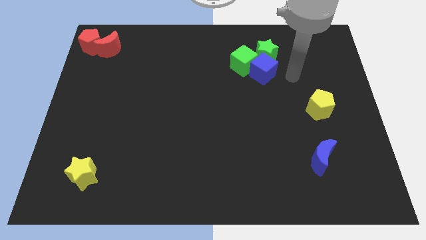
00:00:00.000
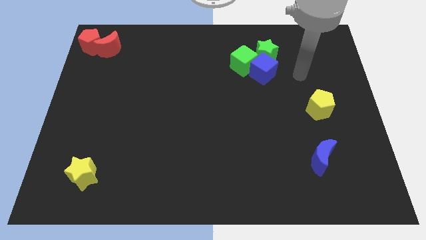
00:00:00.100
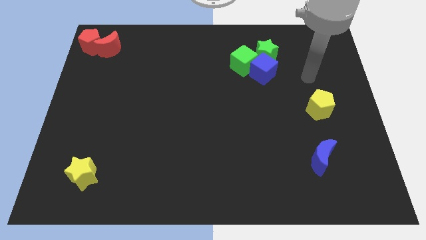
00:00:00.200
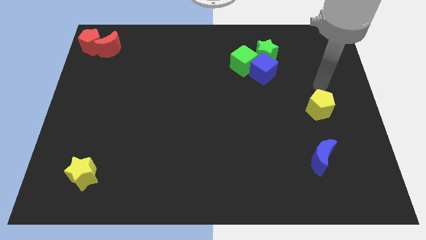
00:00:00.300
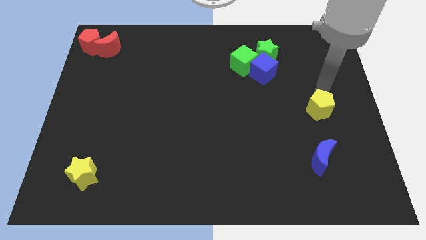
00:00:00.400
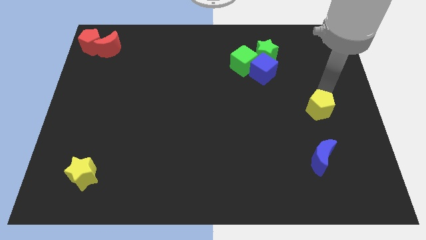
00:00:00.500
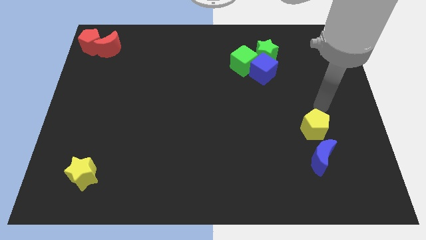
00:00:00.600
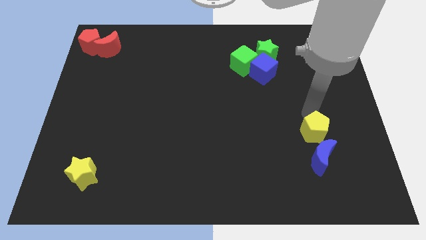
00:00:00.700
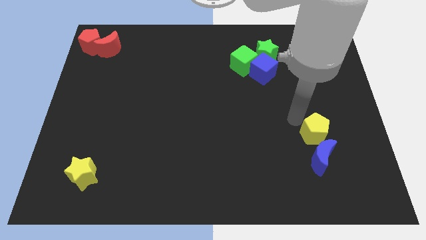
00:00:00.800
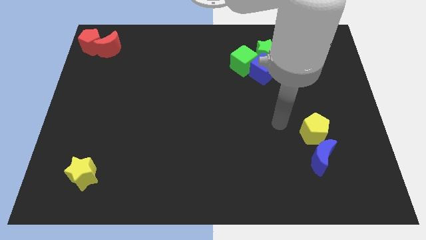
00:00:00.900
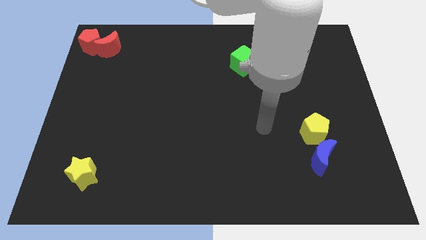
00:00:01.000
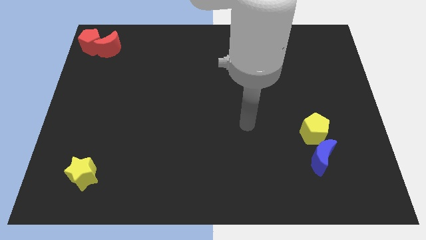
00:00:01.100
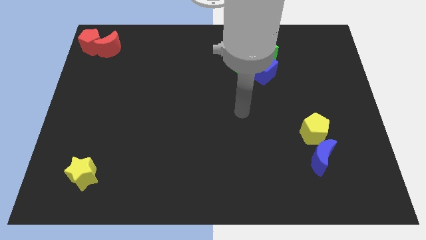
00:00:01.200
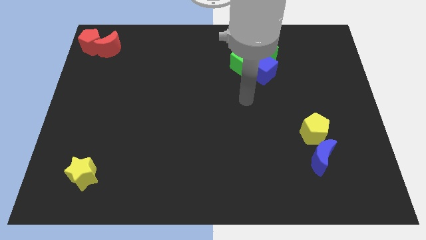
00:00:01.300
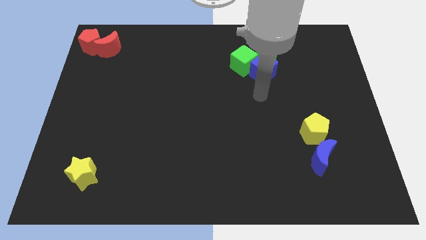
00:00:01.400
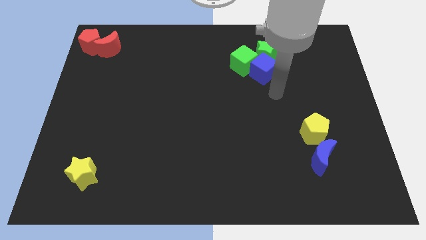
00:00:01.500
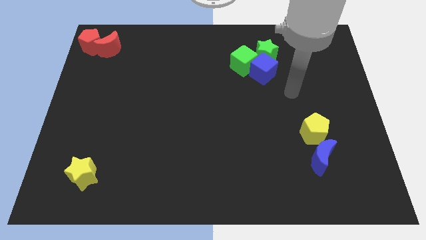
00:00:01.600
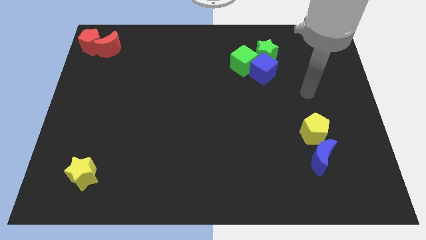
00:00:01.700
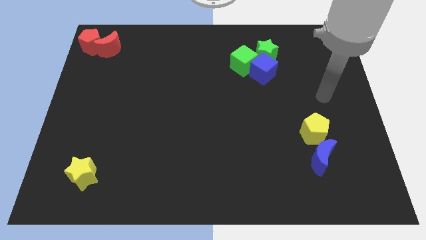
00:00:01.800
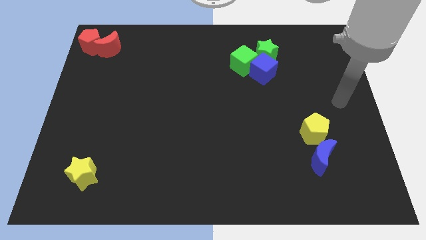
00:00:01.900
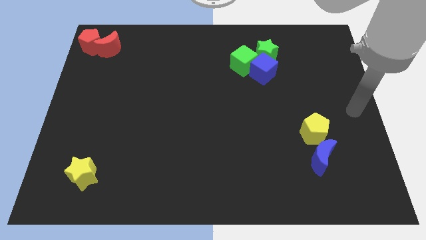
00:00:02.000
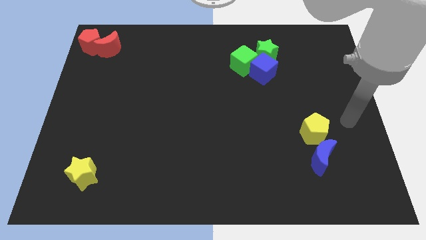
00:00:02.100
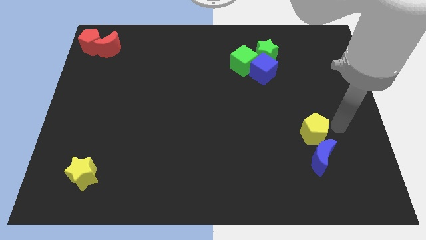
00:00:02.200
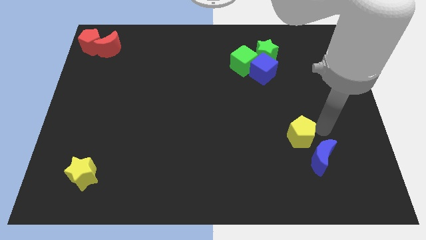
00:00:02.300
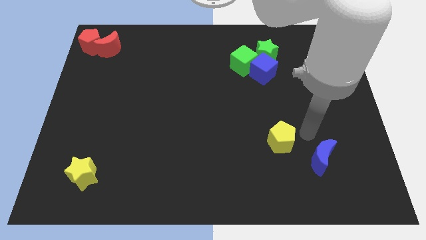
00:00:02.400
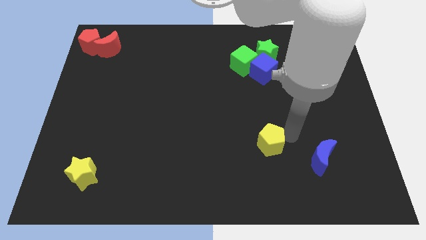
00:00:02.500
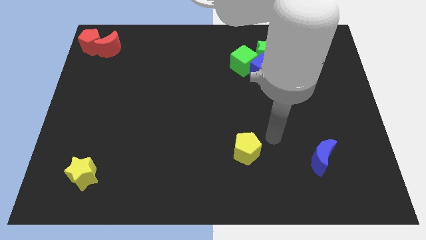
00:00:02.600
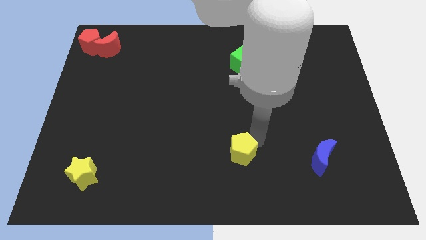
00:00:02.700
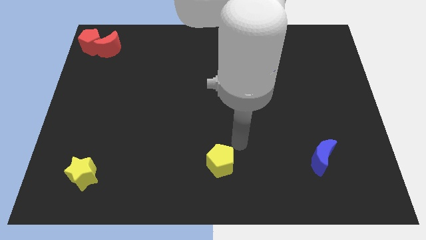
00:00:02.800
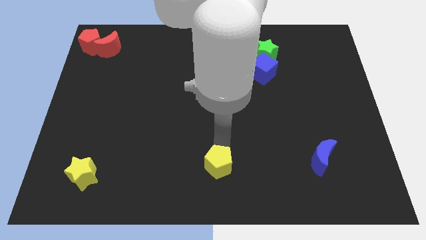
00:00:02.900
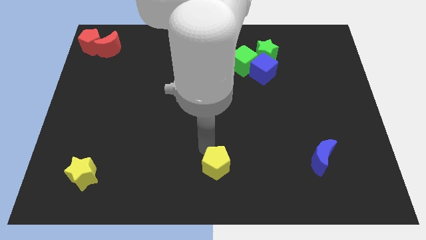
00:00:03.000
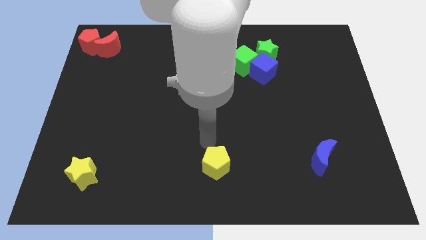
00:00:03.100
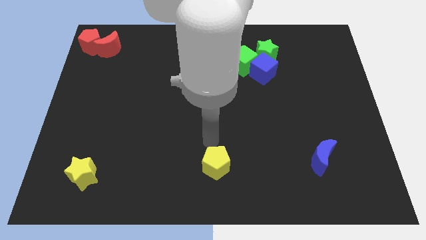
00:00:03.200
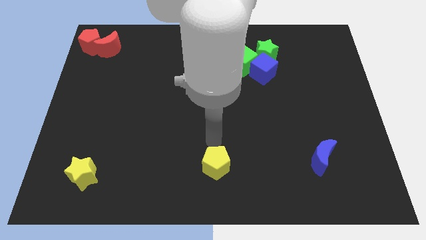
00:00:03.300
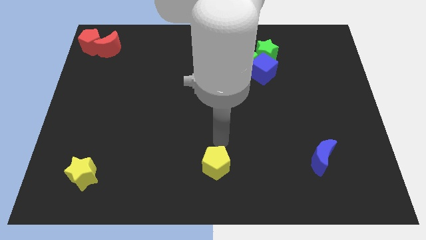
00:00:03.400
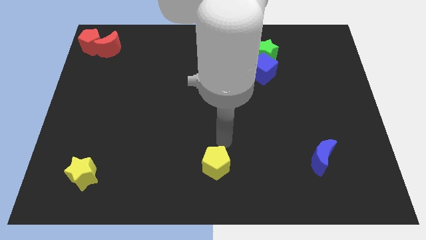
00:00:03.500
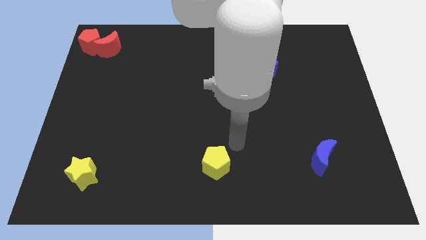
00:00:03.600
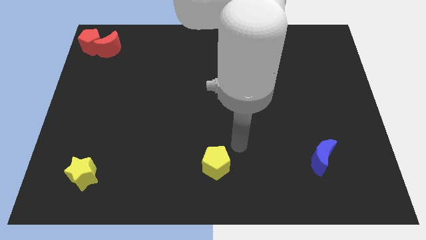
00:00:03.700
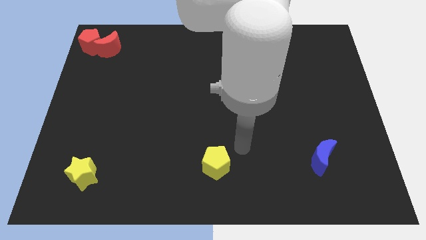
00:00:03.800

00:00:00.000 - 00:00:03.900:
move the yellow pentagon to the bottom centre of the board

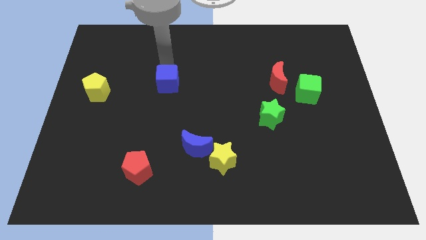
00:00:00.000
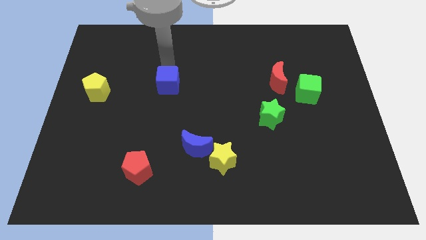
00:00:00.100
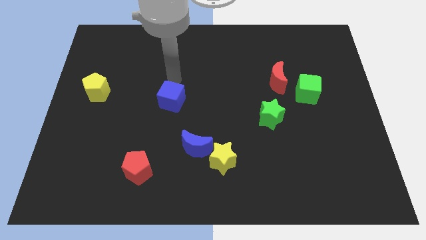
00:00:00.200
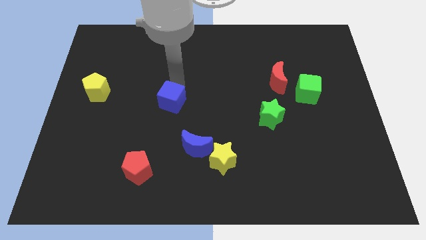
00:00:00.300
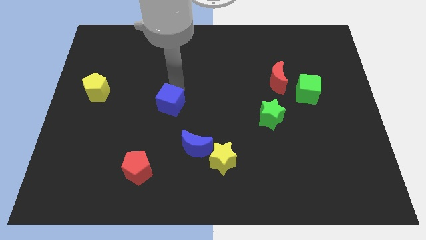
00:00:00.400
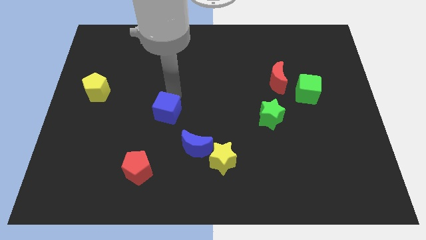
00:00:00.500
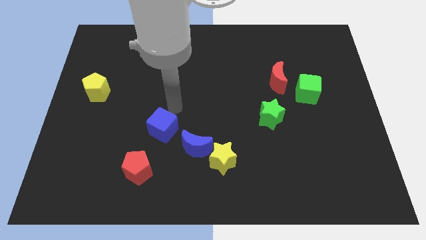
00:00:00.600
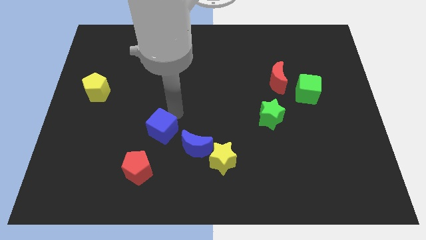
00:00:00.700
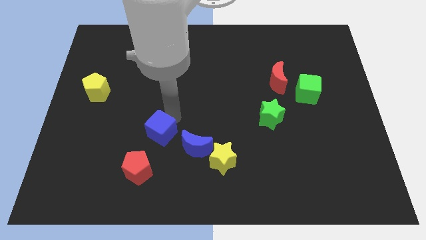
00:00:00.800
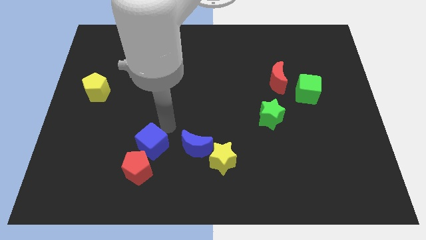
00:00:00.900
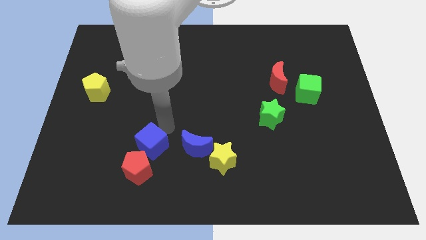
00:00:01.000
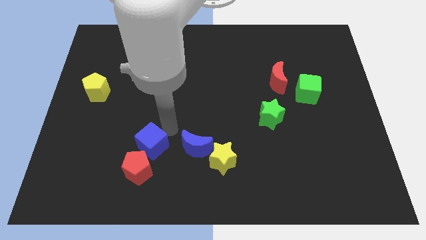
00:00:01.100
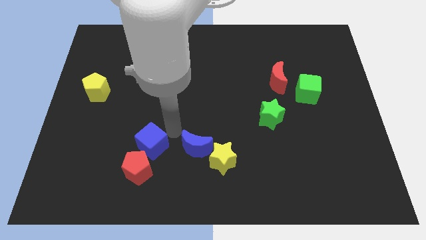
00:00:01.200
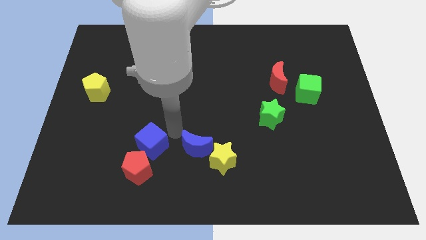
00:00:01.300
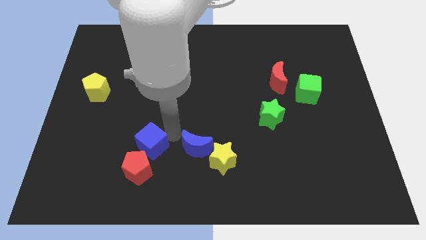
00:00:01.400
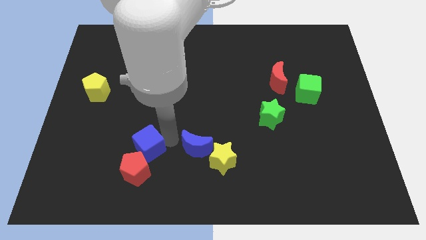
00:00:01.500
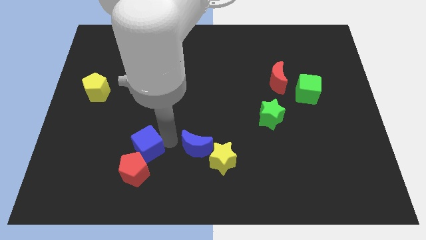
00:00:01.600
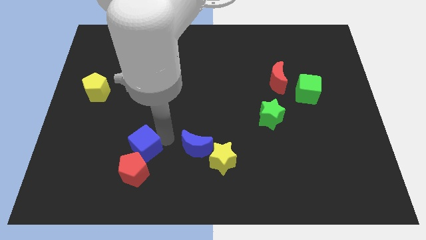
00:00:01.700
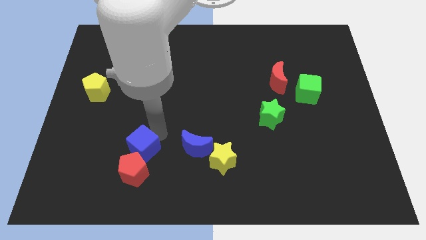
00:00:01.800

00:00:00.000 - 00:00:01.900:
push the blue cube above red pentagon

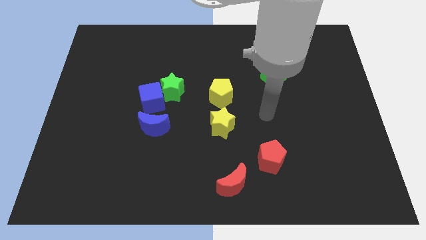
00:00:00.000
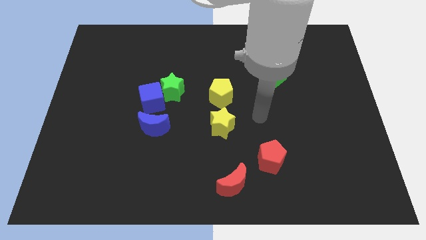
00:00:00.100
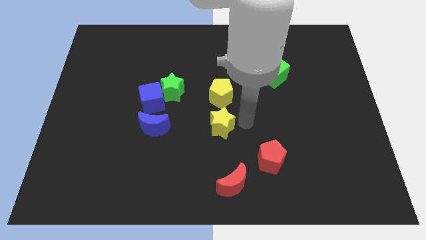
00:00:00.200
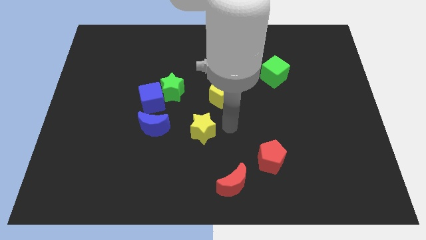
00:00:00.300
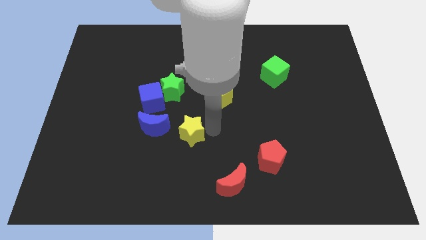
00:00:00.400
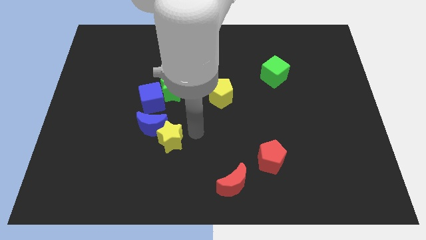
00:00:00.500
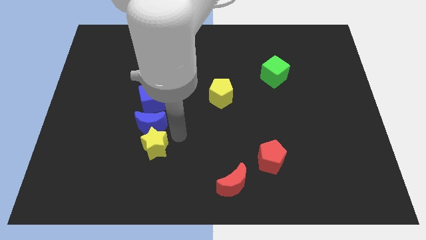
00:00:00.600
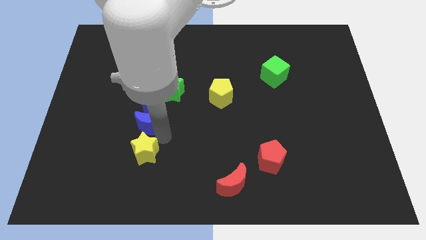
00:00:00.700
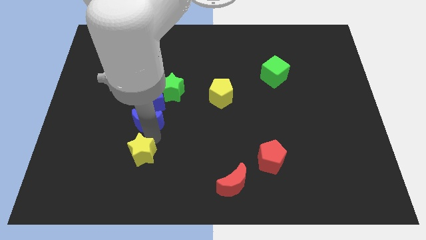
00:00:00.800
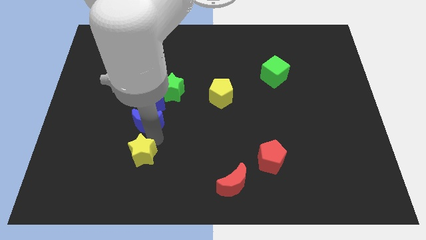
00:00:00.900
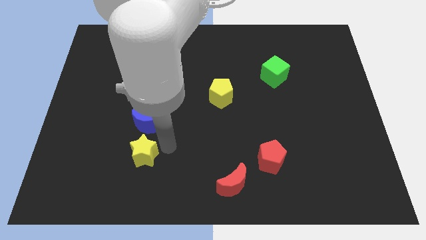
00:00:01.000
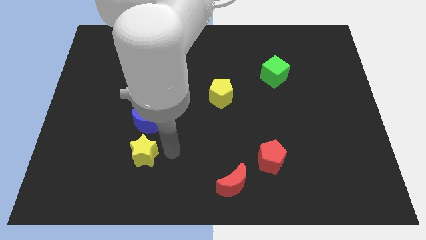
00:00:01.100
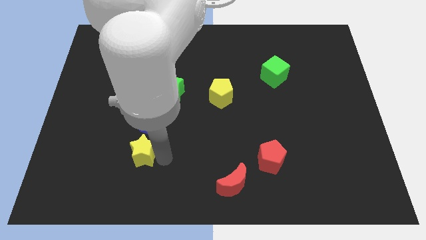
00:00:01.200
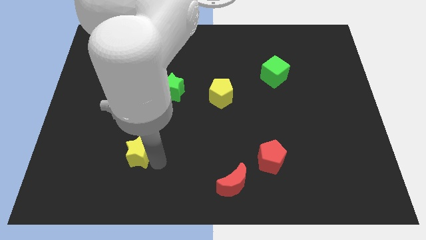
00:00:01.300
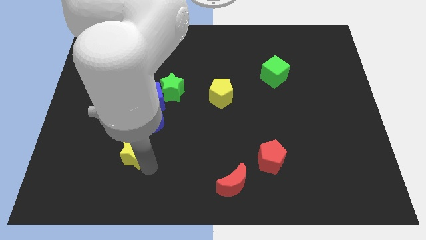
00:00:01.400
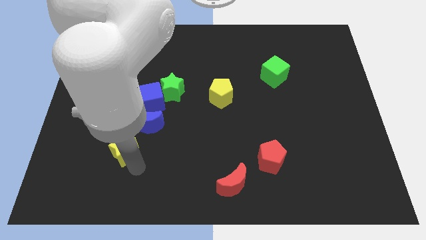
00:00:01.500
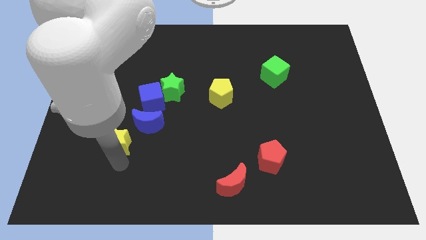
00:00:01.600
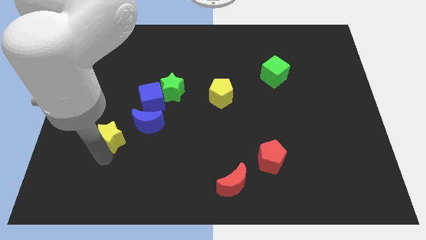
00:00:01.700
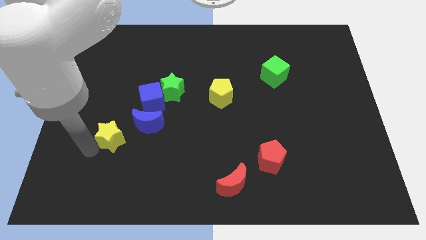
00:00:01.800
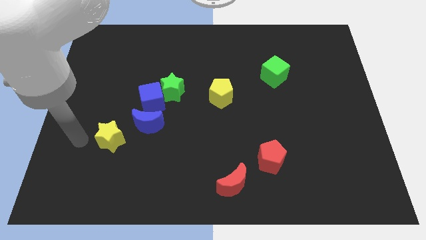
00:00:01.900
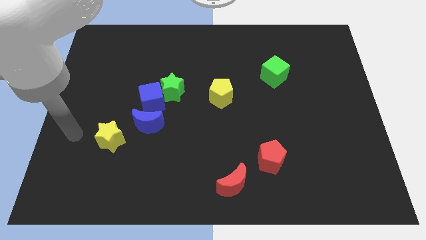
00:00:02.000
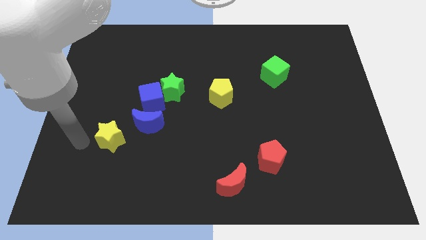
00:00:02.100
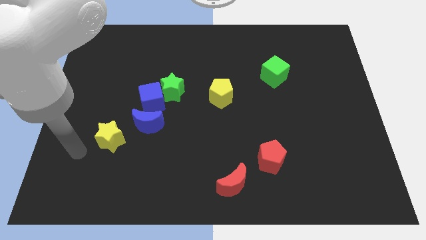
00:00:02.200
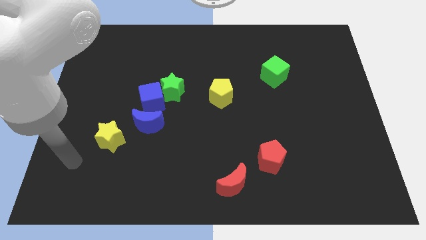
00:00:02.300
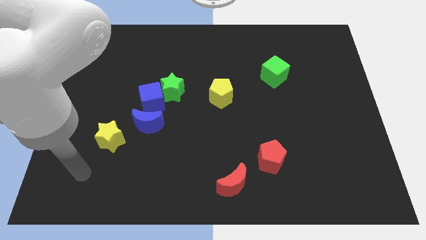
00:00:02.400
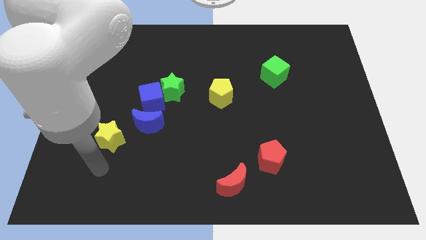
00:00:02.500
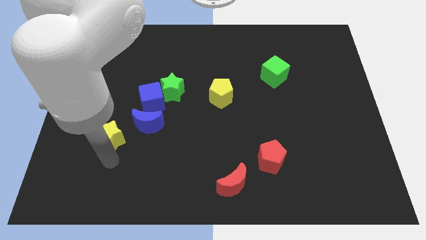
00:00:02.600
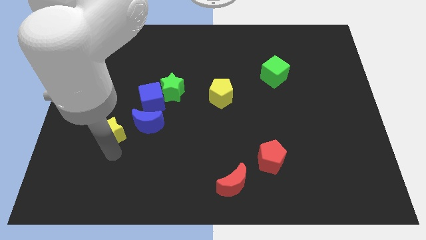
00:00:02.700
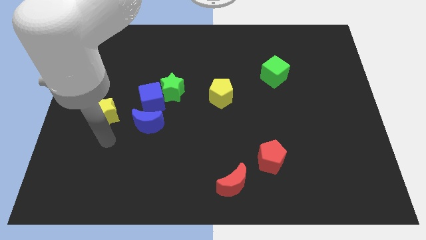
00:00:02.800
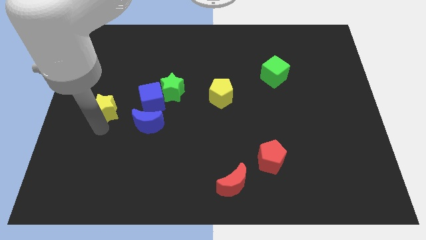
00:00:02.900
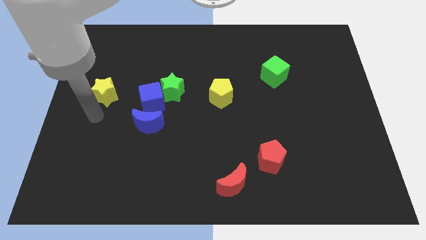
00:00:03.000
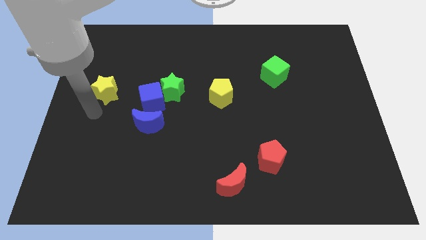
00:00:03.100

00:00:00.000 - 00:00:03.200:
place the yellow star diagonally top left to the blue moon

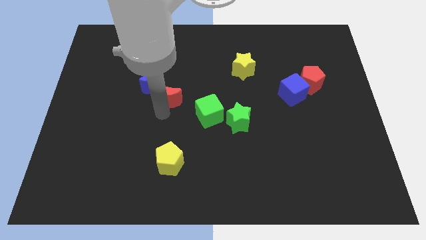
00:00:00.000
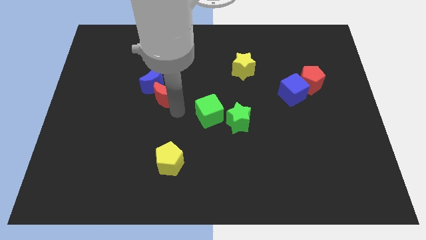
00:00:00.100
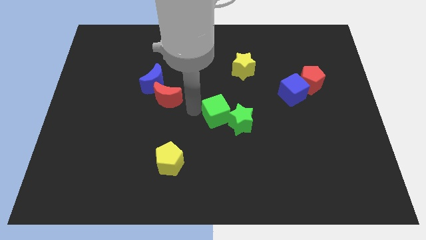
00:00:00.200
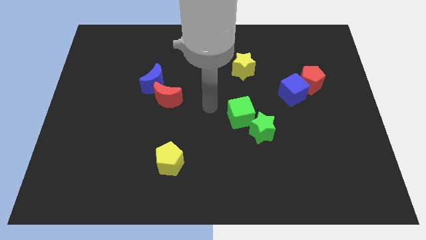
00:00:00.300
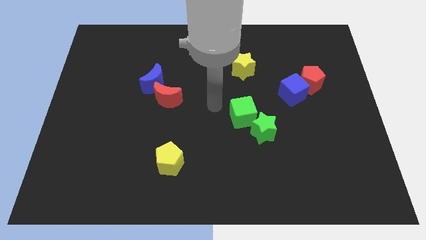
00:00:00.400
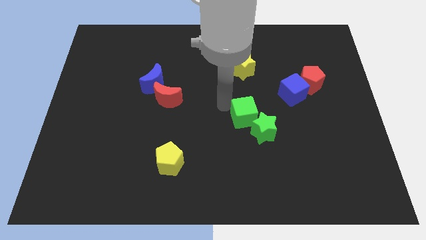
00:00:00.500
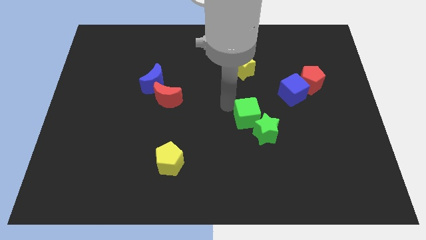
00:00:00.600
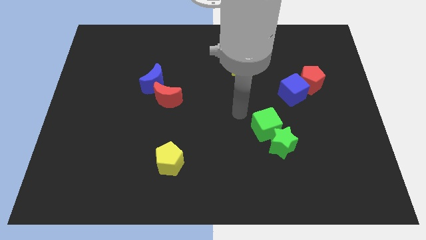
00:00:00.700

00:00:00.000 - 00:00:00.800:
move green cube into the green star
